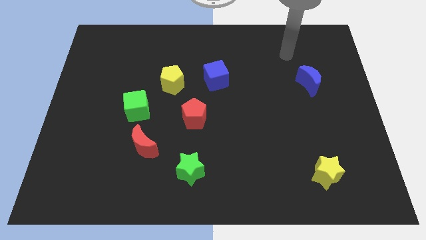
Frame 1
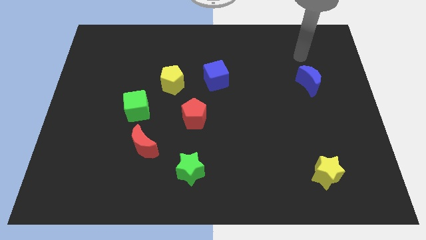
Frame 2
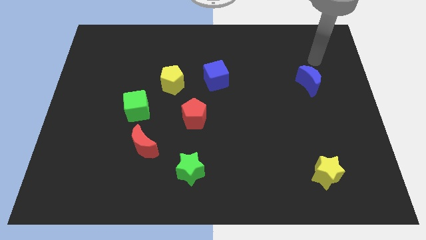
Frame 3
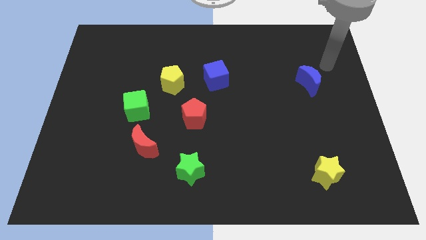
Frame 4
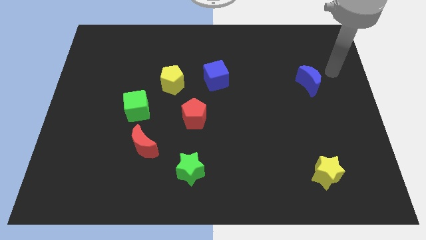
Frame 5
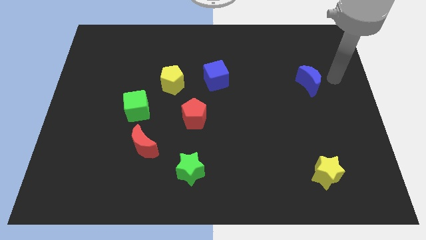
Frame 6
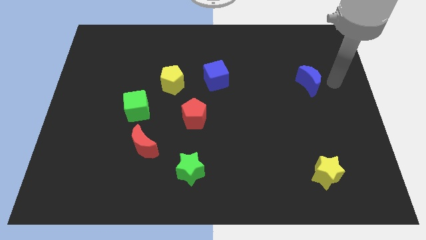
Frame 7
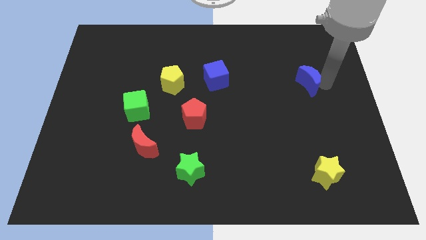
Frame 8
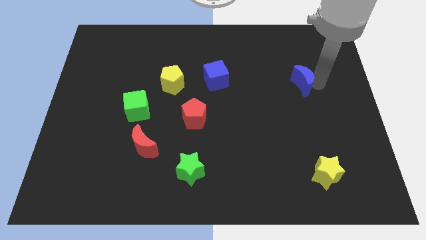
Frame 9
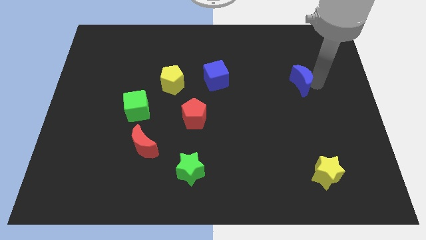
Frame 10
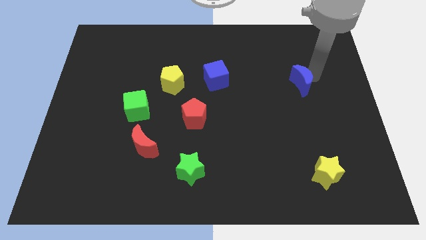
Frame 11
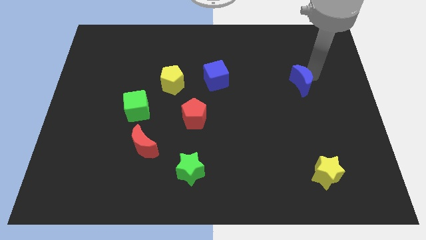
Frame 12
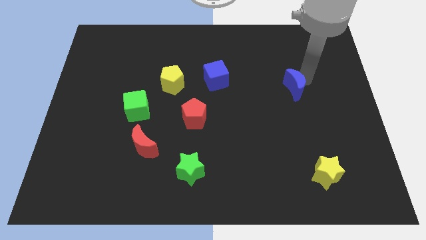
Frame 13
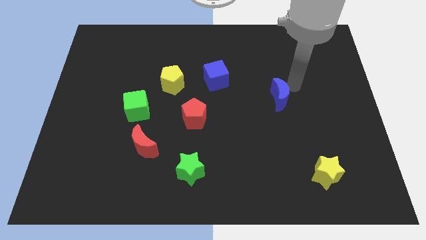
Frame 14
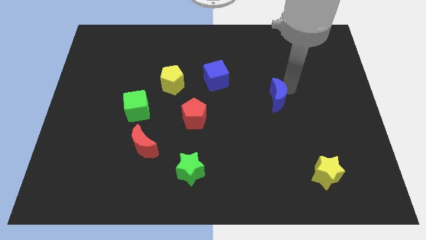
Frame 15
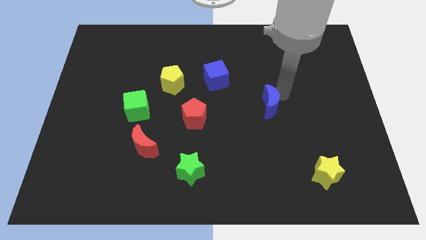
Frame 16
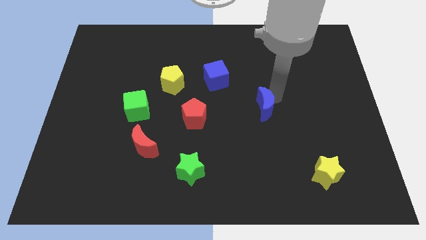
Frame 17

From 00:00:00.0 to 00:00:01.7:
move the blue crescent towards red pentagon

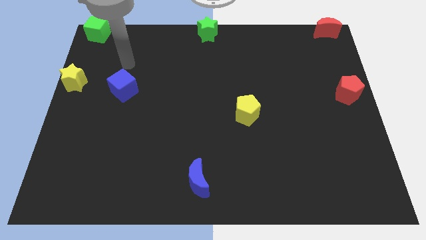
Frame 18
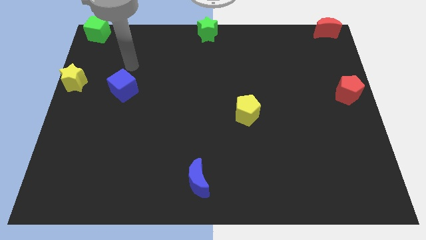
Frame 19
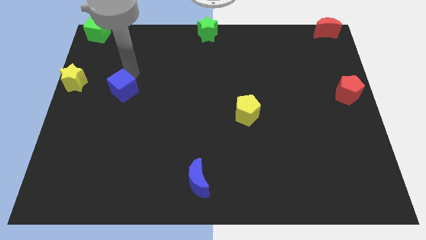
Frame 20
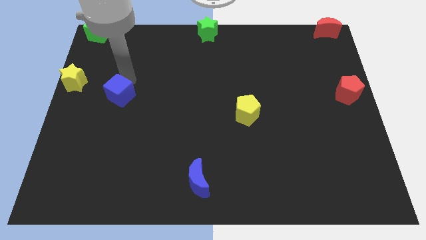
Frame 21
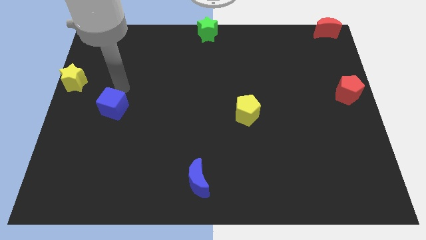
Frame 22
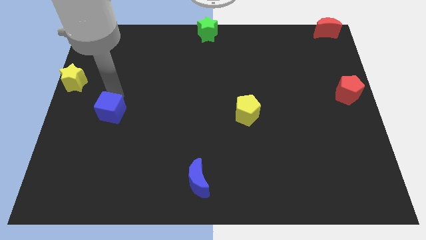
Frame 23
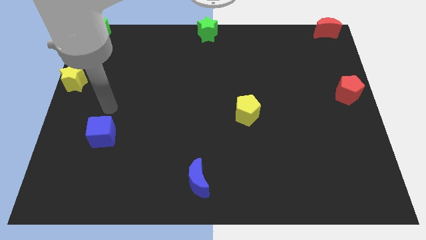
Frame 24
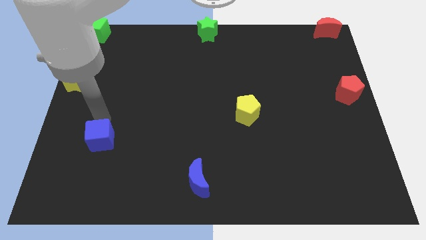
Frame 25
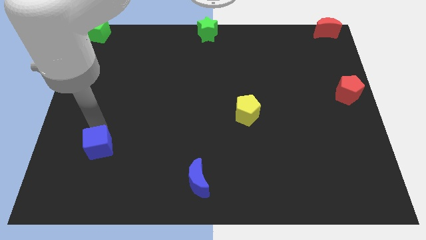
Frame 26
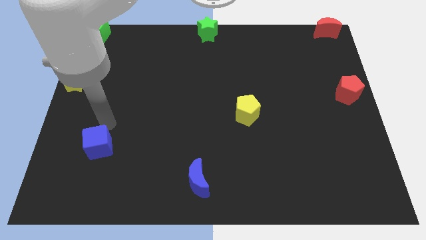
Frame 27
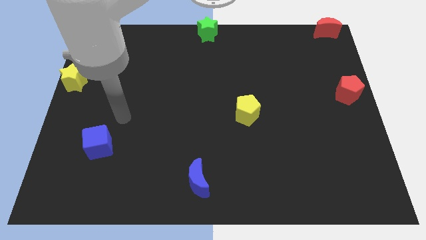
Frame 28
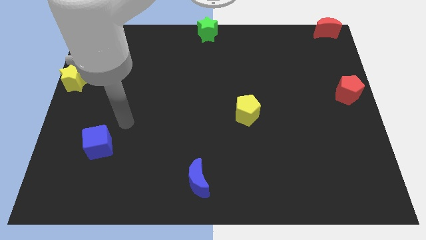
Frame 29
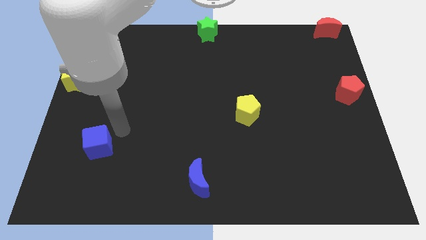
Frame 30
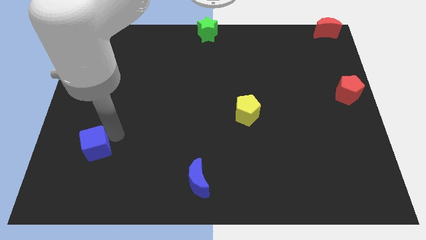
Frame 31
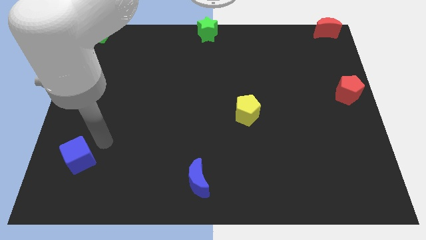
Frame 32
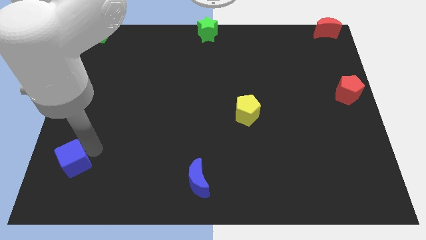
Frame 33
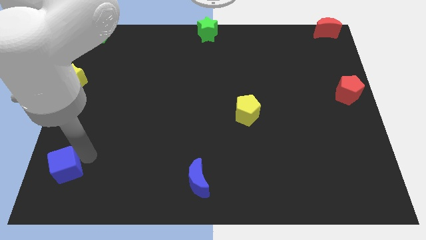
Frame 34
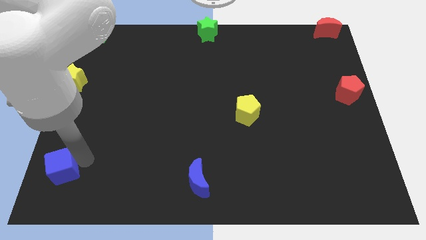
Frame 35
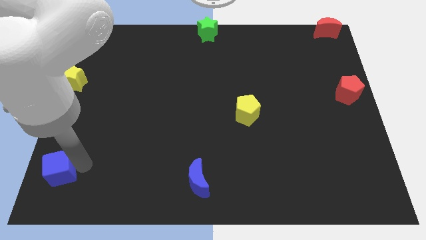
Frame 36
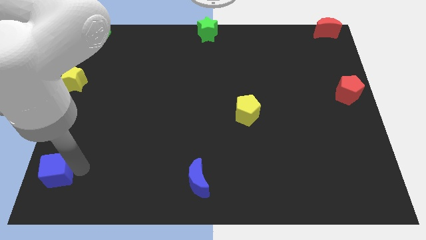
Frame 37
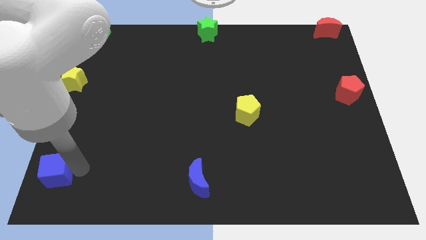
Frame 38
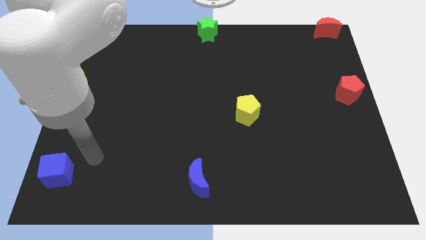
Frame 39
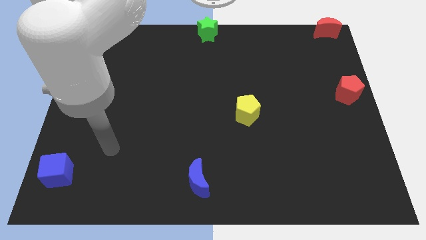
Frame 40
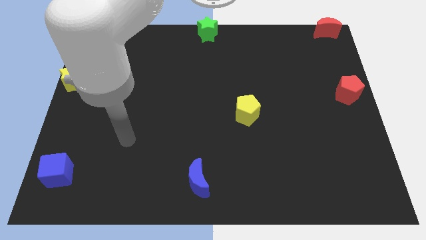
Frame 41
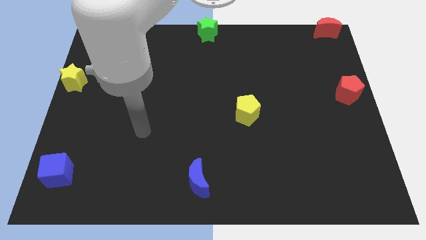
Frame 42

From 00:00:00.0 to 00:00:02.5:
place blue cube towards bottom left corner

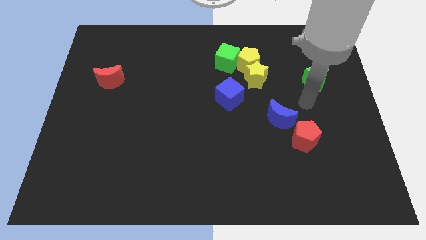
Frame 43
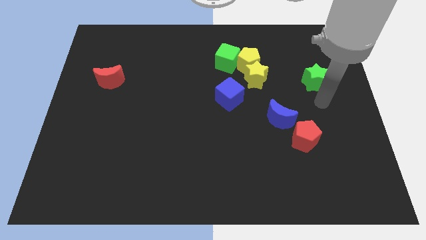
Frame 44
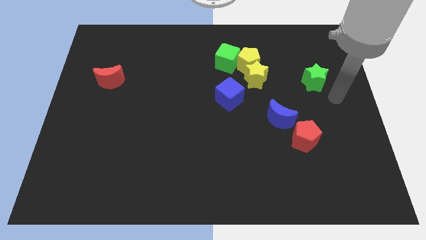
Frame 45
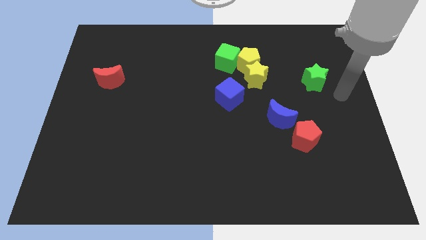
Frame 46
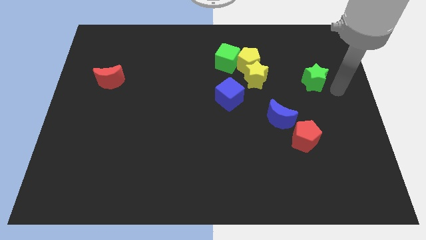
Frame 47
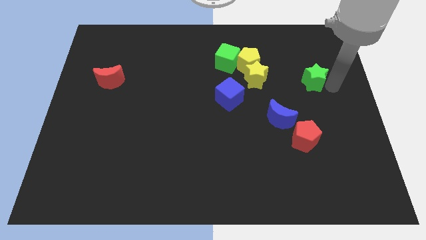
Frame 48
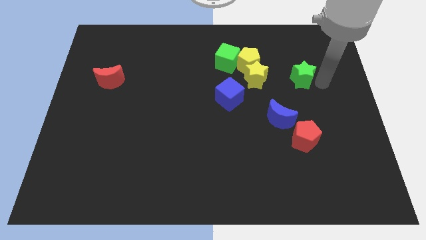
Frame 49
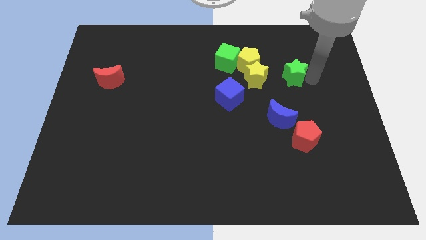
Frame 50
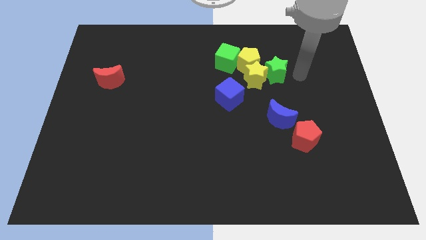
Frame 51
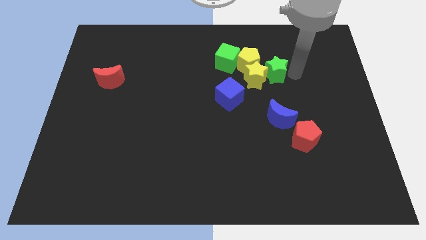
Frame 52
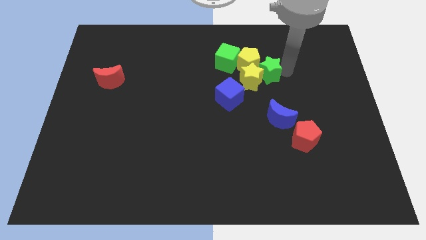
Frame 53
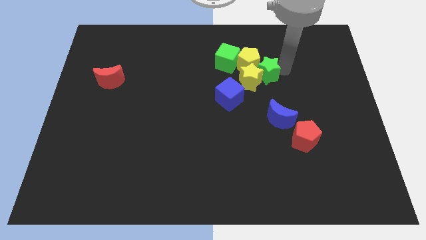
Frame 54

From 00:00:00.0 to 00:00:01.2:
slide the green star into the right side of the yellow star

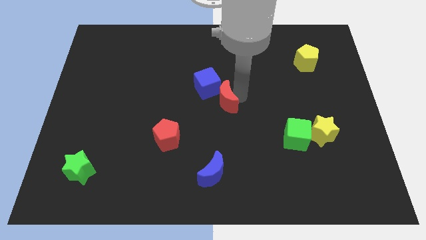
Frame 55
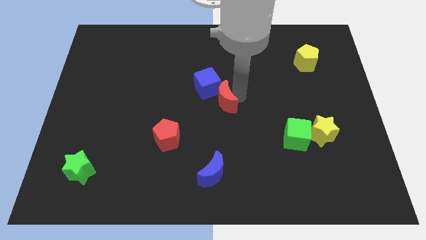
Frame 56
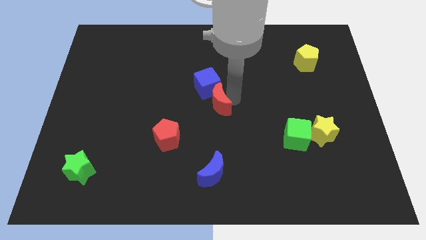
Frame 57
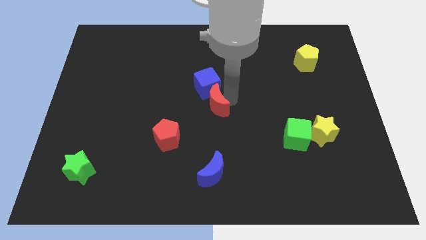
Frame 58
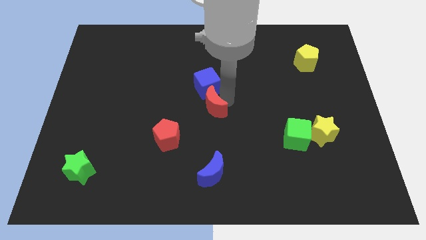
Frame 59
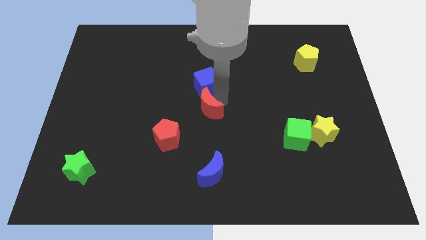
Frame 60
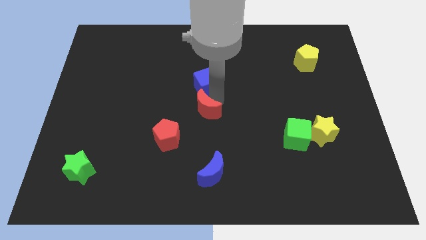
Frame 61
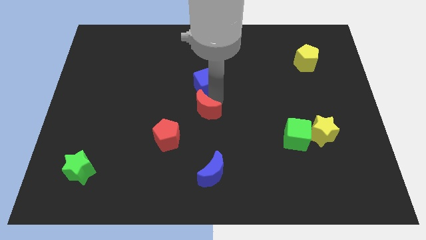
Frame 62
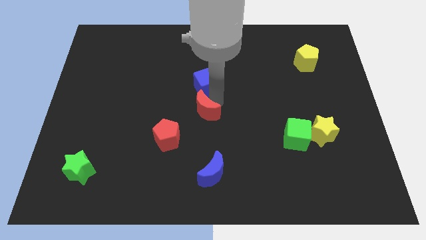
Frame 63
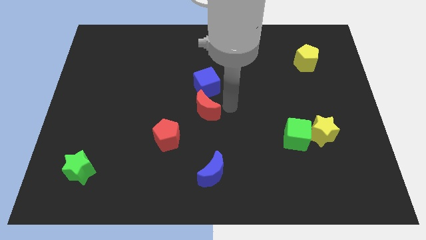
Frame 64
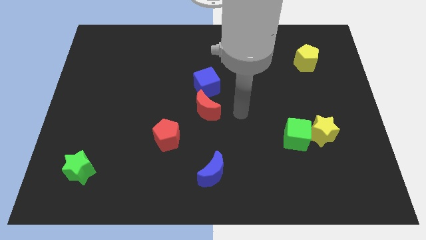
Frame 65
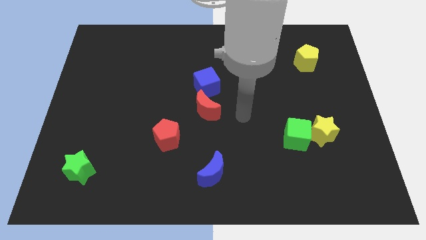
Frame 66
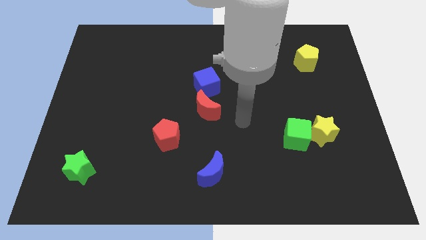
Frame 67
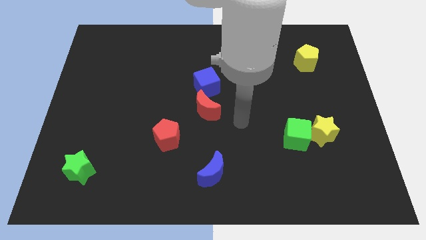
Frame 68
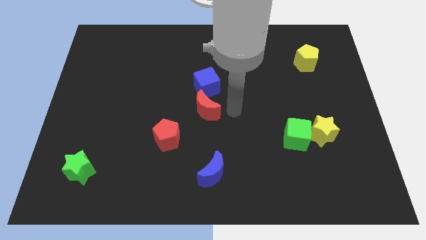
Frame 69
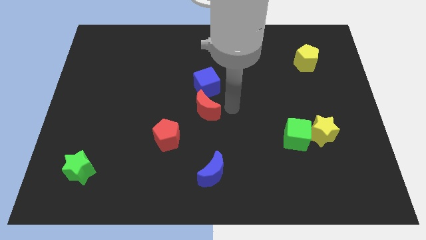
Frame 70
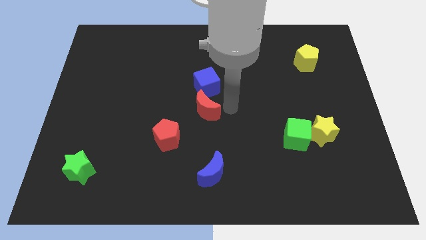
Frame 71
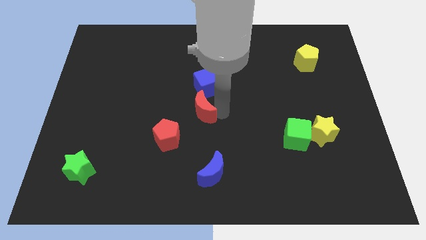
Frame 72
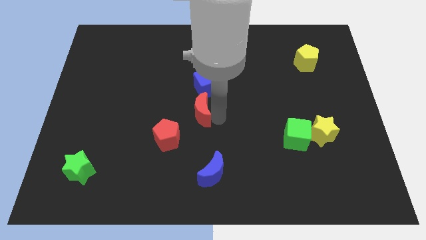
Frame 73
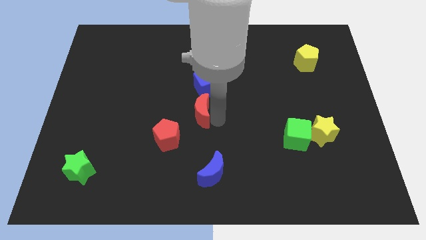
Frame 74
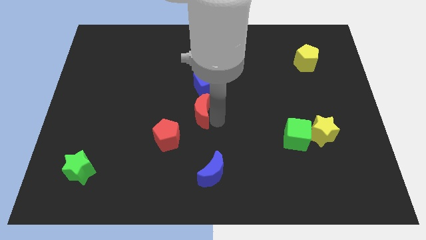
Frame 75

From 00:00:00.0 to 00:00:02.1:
move the red crescent to the bottom of blue cube

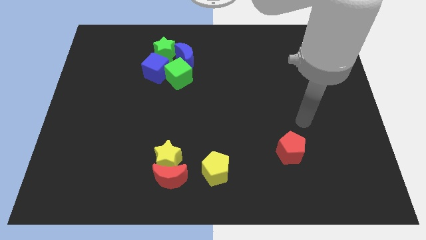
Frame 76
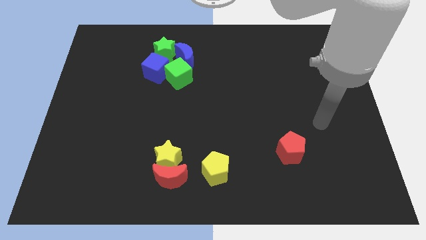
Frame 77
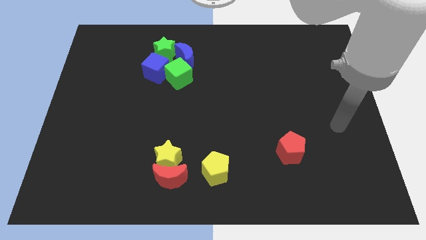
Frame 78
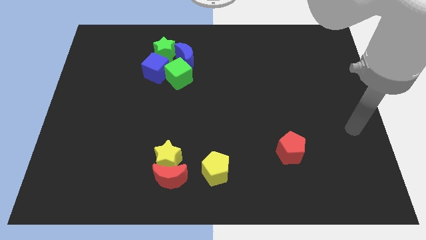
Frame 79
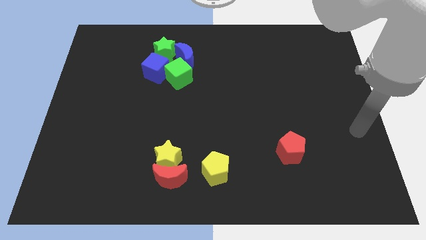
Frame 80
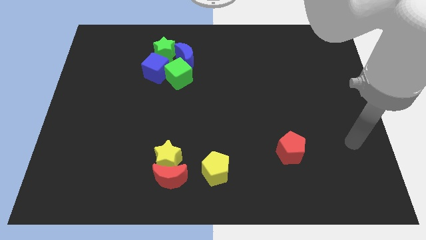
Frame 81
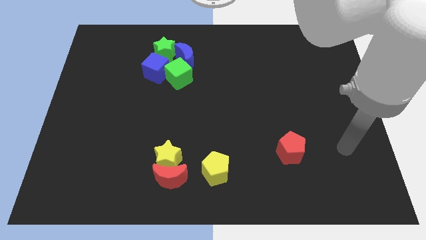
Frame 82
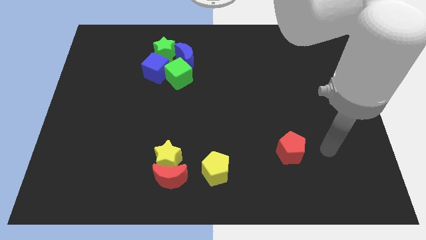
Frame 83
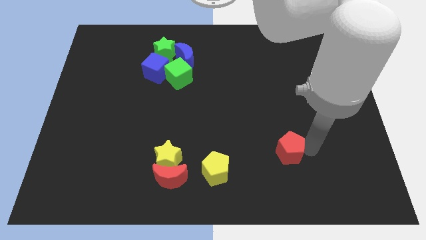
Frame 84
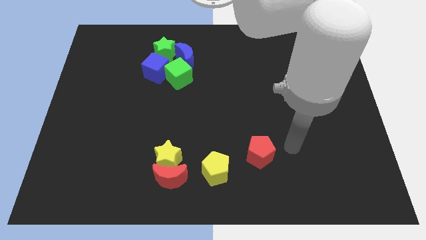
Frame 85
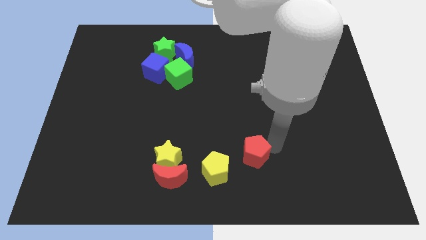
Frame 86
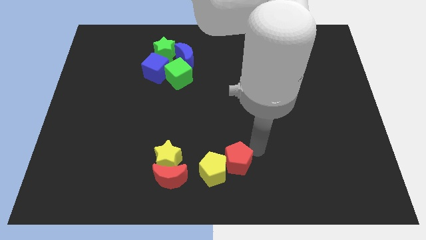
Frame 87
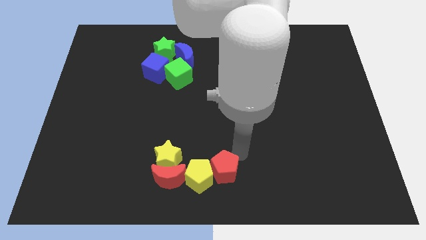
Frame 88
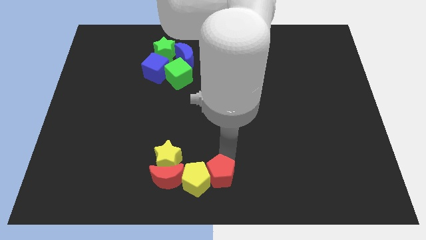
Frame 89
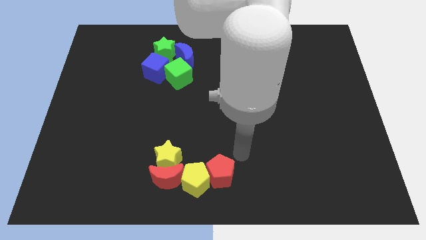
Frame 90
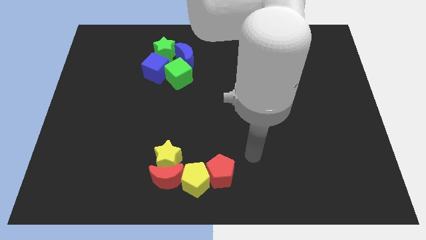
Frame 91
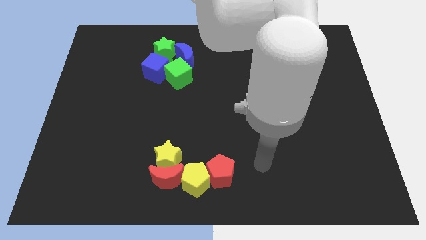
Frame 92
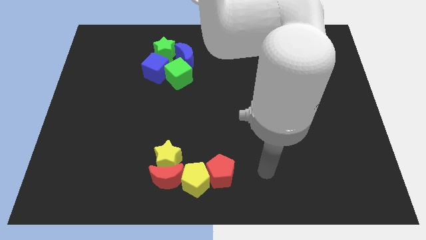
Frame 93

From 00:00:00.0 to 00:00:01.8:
place the red pentagon to the right side of yellow pentagon
